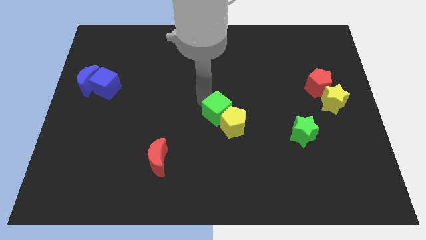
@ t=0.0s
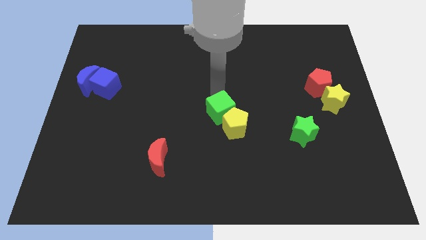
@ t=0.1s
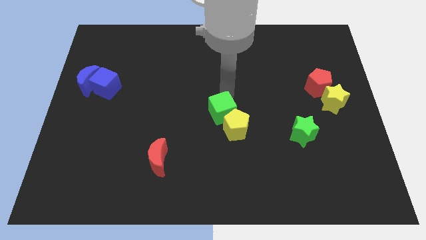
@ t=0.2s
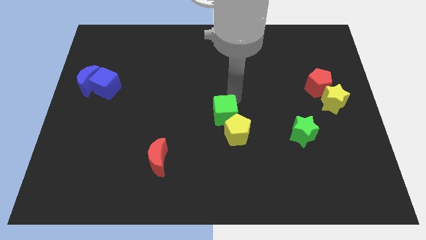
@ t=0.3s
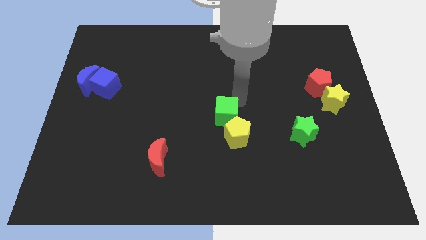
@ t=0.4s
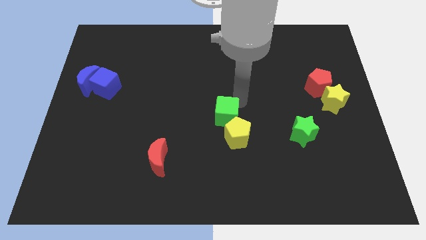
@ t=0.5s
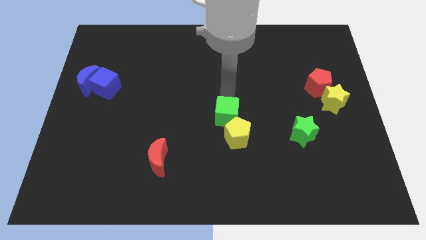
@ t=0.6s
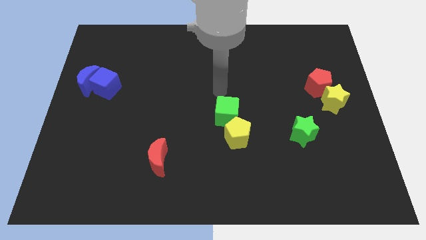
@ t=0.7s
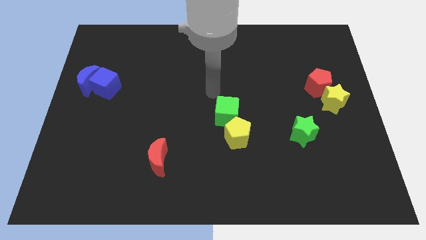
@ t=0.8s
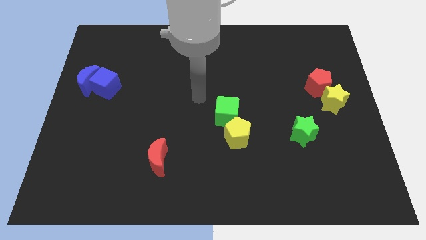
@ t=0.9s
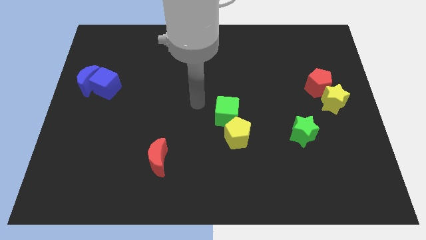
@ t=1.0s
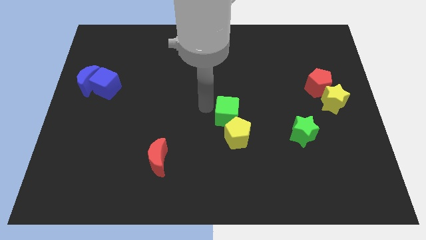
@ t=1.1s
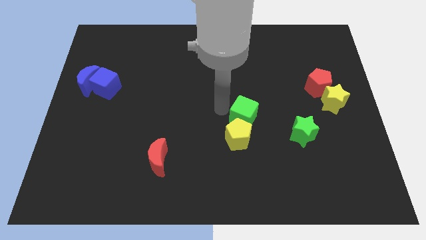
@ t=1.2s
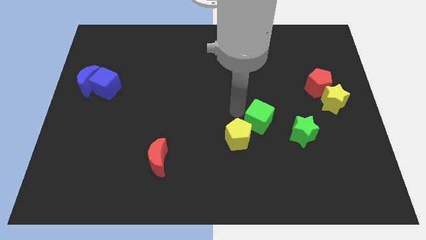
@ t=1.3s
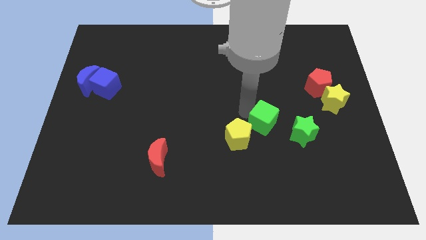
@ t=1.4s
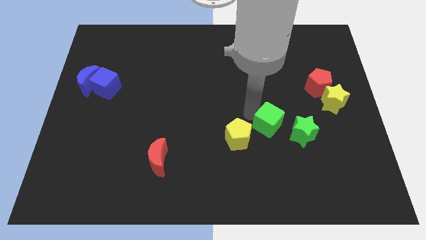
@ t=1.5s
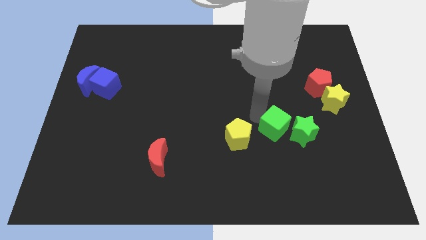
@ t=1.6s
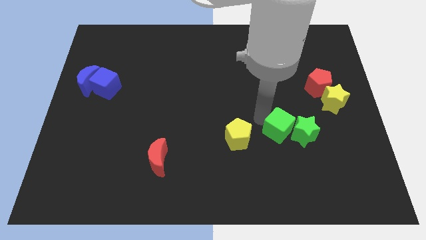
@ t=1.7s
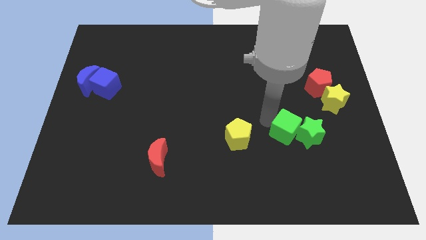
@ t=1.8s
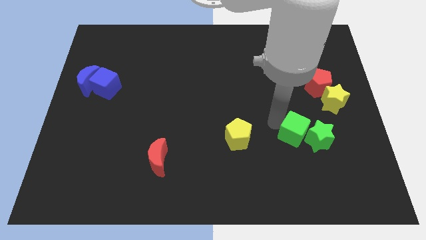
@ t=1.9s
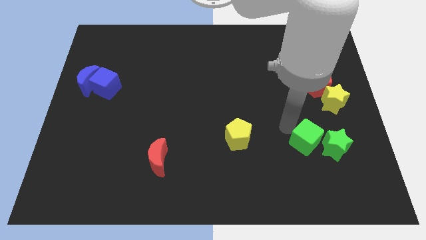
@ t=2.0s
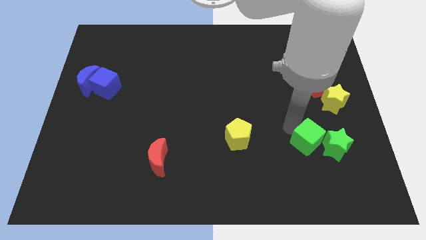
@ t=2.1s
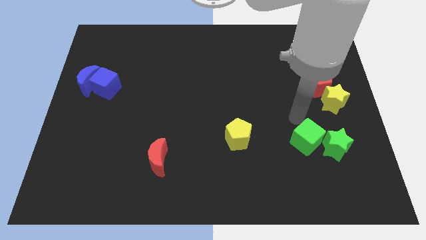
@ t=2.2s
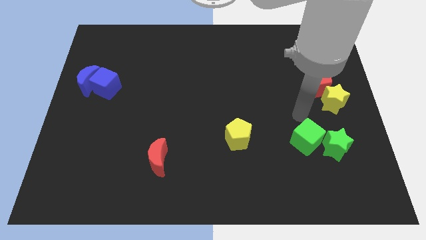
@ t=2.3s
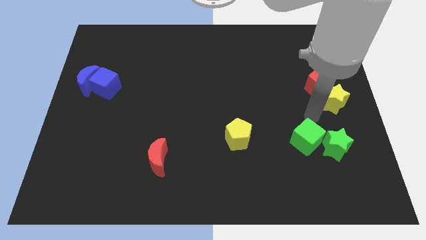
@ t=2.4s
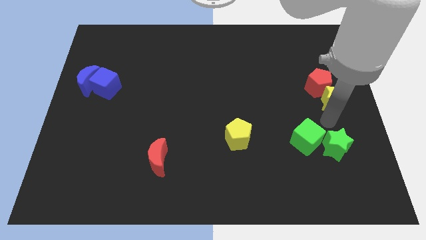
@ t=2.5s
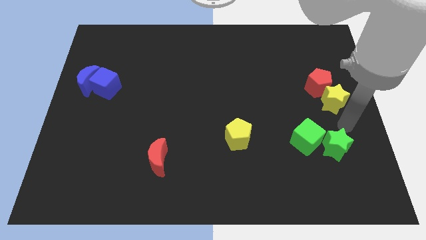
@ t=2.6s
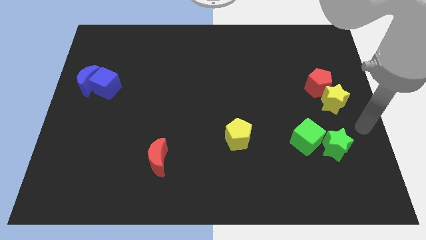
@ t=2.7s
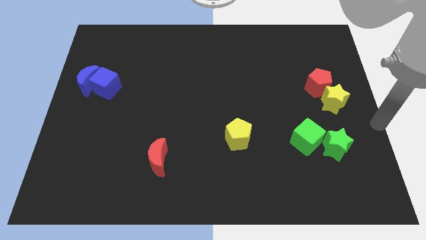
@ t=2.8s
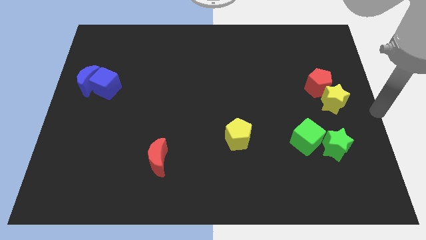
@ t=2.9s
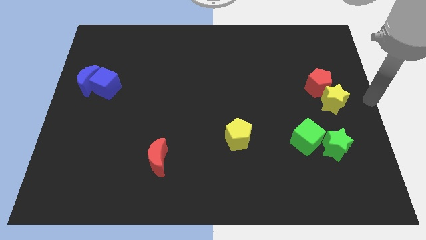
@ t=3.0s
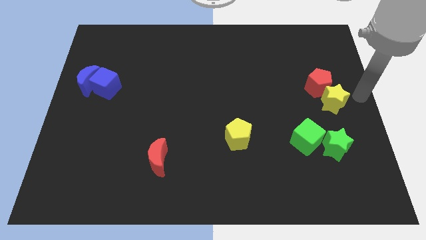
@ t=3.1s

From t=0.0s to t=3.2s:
push the green cube into the green star

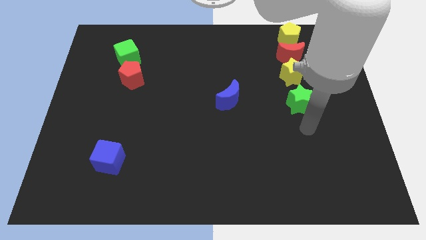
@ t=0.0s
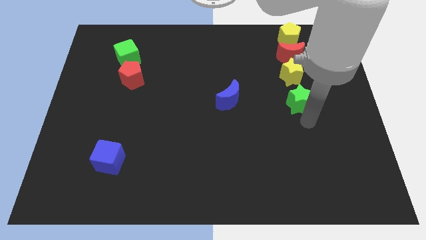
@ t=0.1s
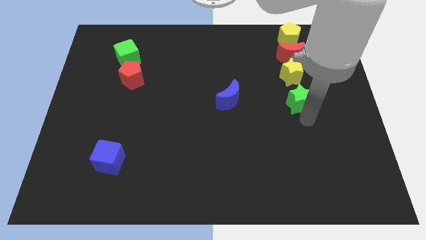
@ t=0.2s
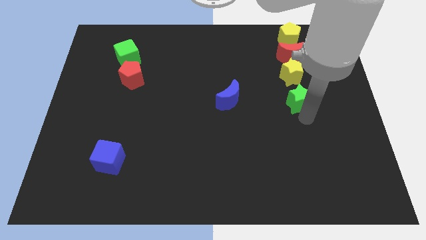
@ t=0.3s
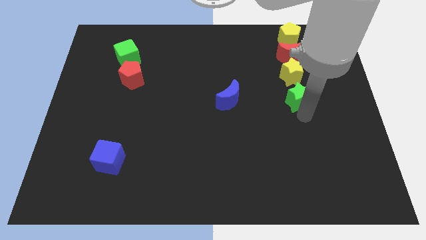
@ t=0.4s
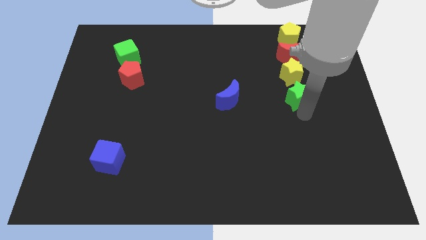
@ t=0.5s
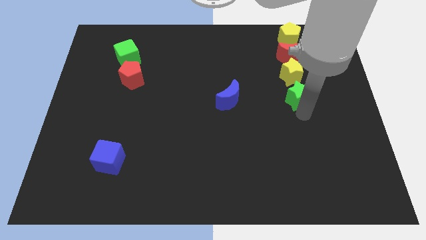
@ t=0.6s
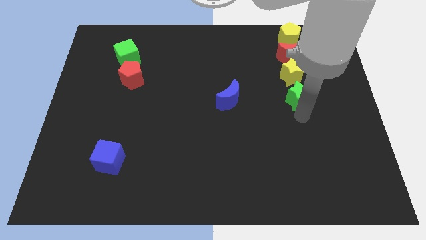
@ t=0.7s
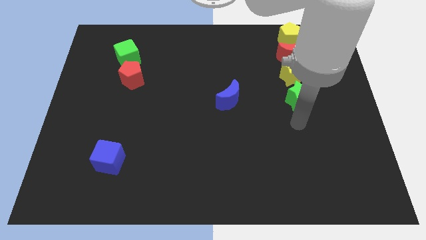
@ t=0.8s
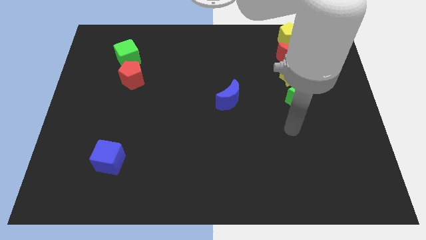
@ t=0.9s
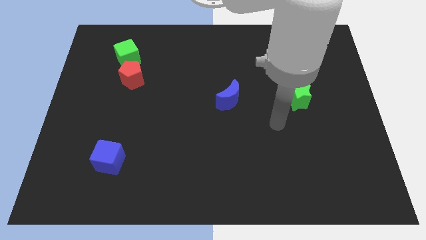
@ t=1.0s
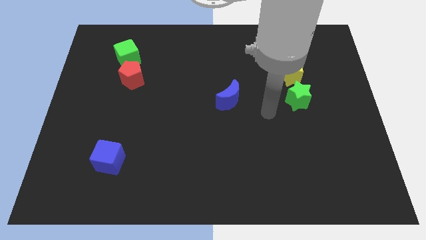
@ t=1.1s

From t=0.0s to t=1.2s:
place green star below the yellow star

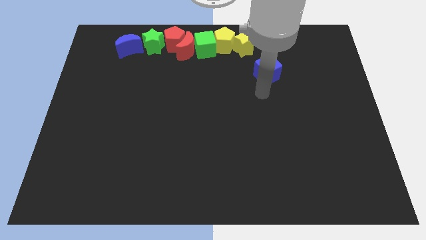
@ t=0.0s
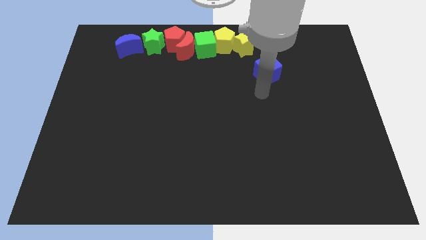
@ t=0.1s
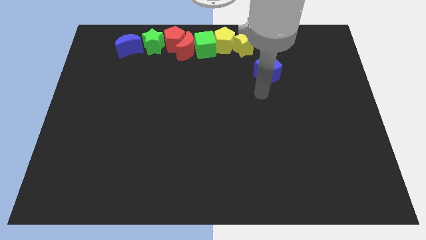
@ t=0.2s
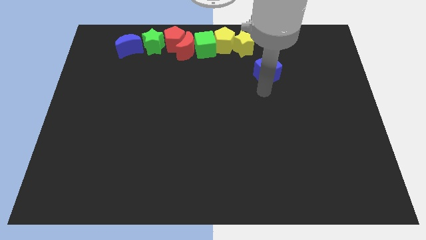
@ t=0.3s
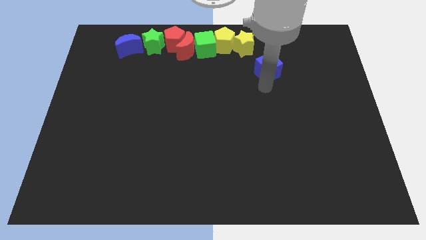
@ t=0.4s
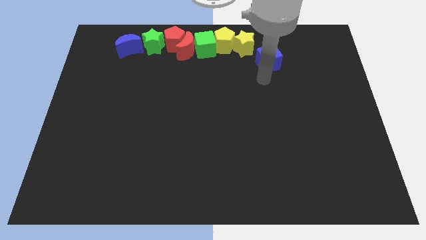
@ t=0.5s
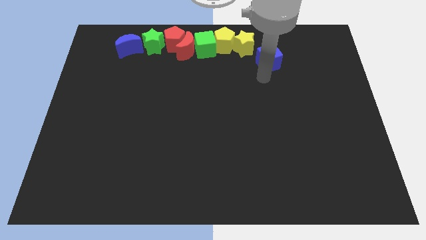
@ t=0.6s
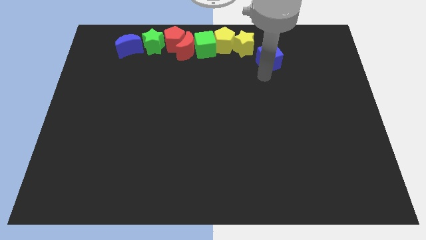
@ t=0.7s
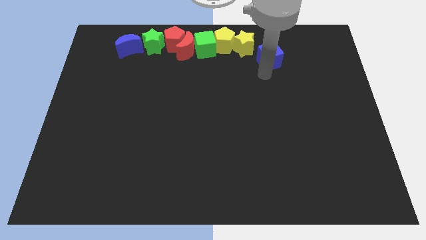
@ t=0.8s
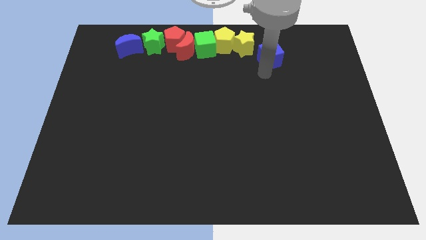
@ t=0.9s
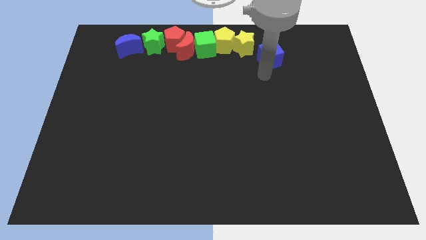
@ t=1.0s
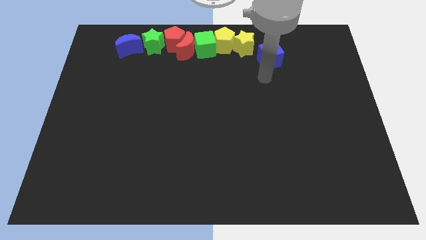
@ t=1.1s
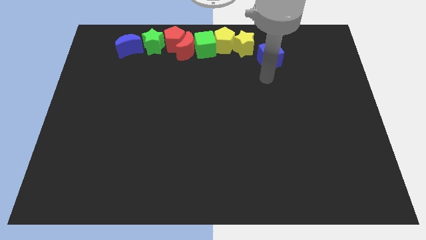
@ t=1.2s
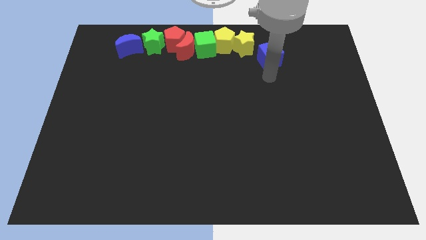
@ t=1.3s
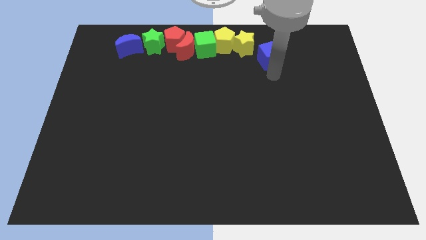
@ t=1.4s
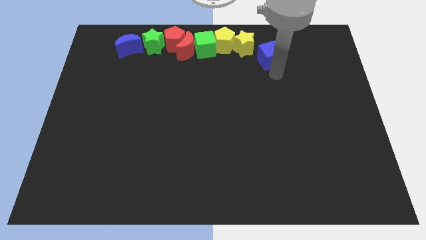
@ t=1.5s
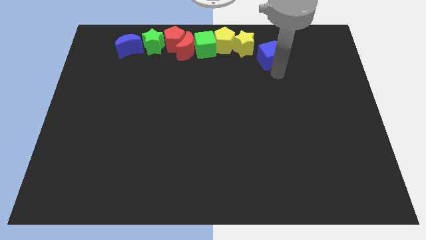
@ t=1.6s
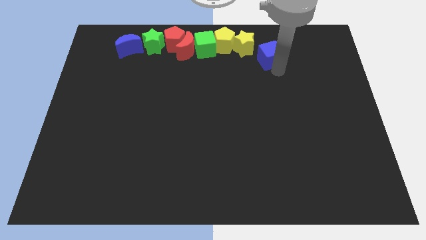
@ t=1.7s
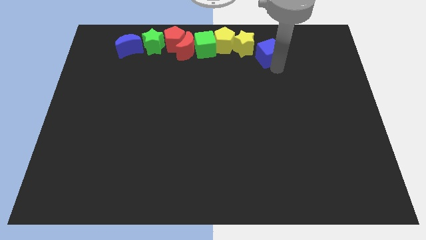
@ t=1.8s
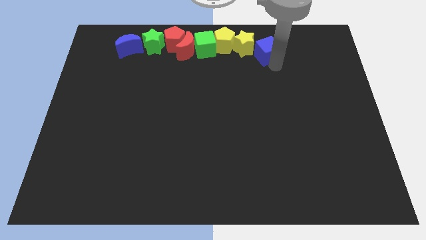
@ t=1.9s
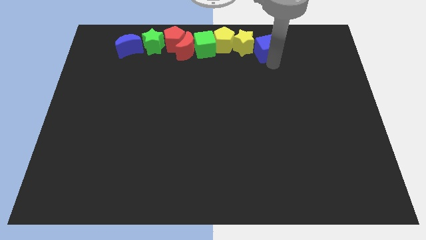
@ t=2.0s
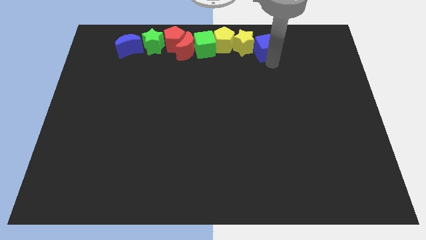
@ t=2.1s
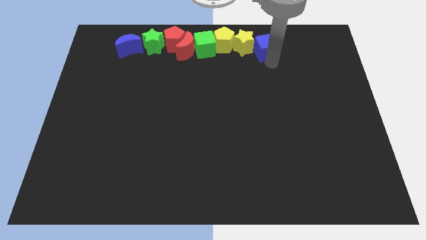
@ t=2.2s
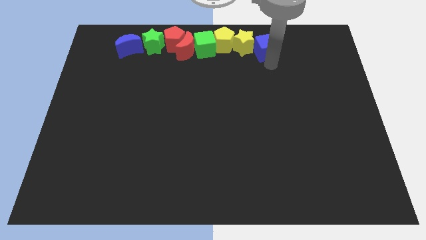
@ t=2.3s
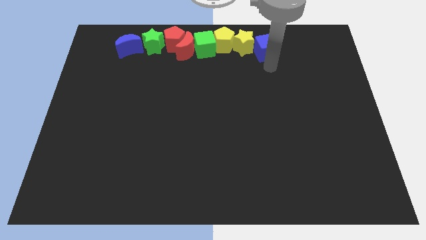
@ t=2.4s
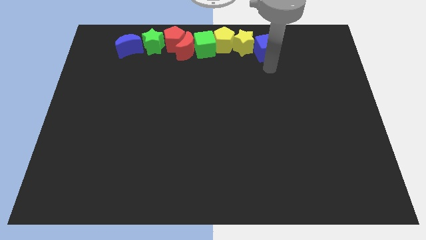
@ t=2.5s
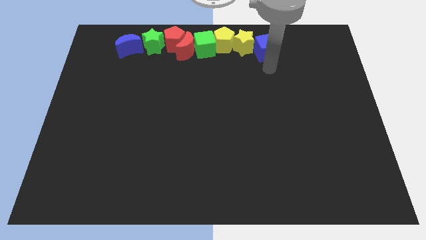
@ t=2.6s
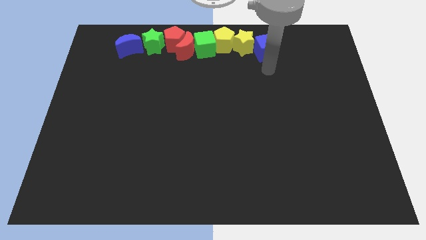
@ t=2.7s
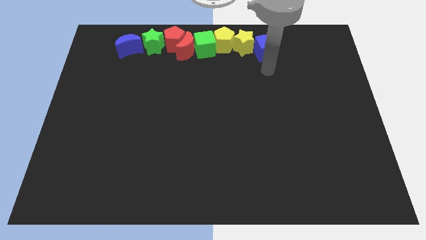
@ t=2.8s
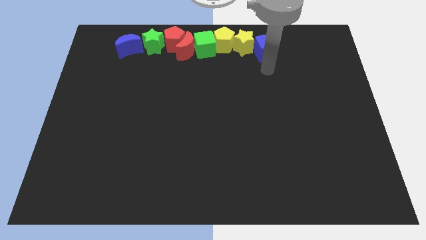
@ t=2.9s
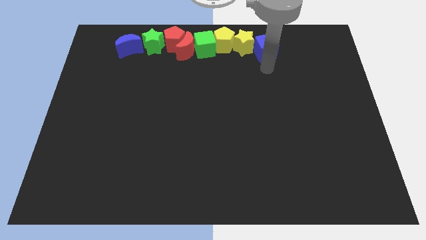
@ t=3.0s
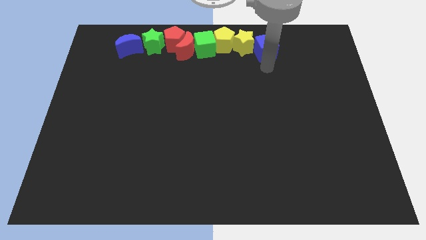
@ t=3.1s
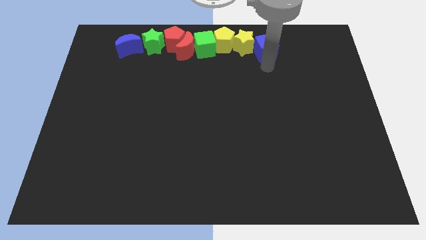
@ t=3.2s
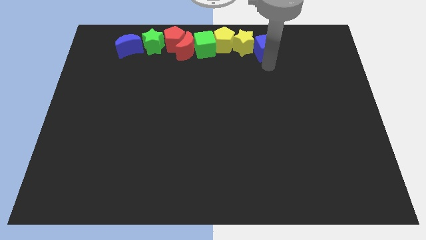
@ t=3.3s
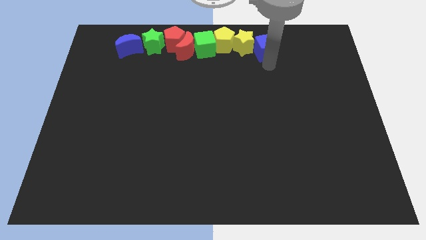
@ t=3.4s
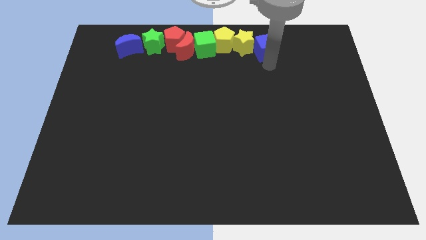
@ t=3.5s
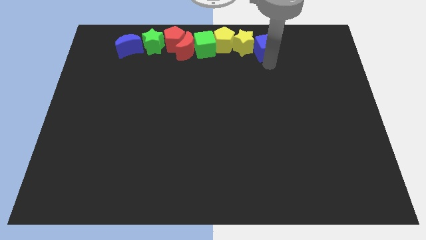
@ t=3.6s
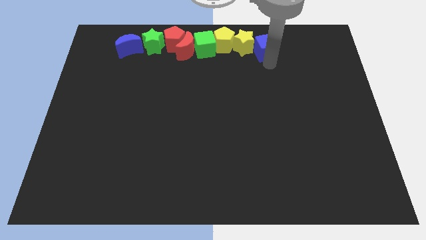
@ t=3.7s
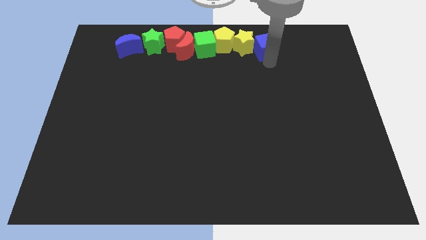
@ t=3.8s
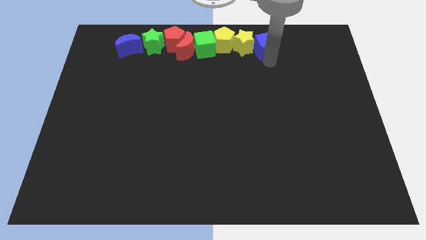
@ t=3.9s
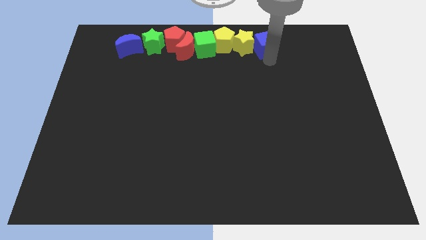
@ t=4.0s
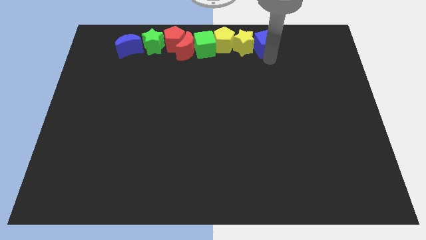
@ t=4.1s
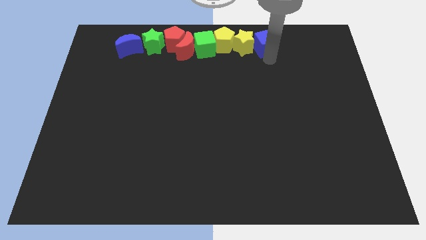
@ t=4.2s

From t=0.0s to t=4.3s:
drag the blue cube into the right side of the yellow star

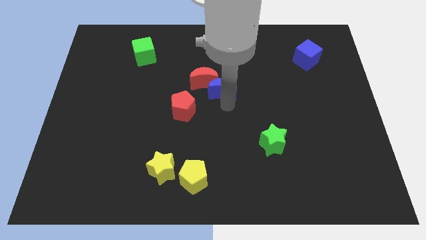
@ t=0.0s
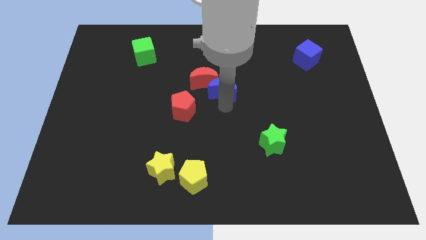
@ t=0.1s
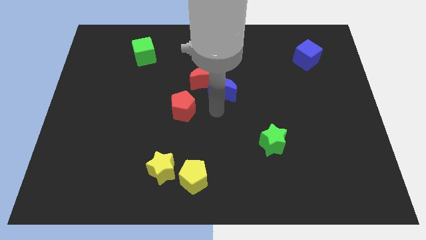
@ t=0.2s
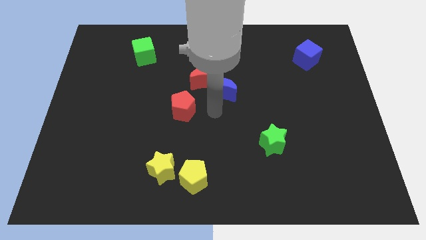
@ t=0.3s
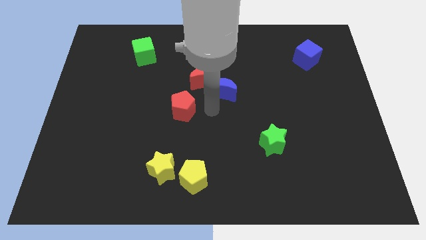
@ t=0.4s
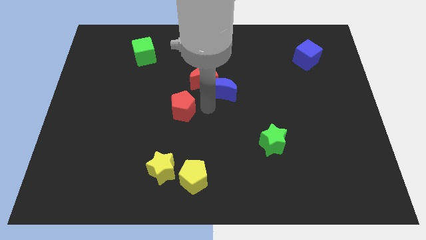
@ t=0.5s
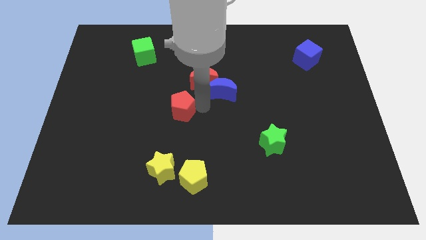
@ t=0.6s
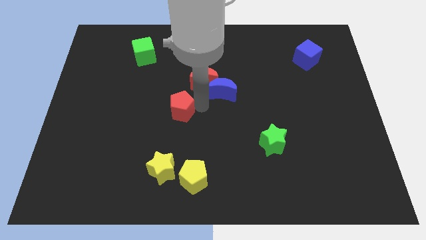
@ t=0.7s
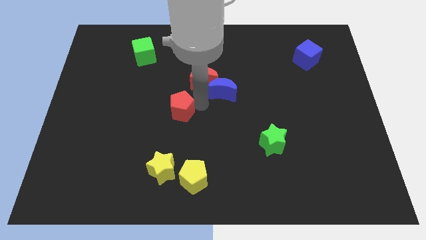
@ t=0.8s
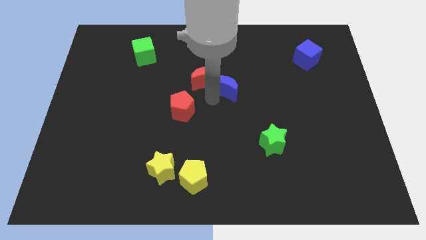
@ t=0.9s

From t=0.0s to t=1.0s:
move the arm into the blue crescent
